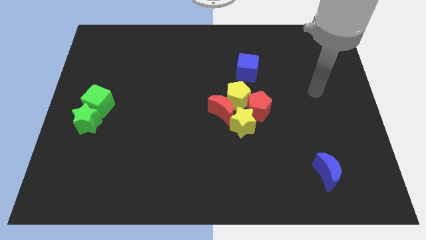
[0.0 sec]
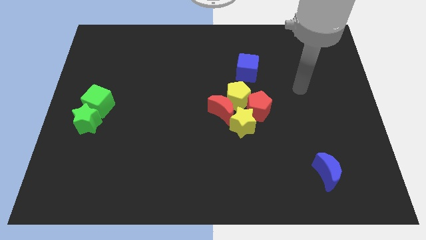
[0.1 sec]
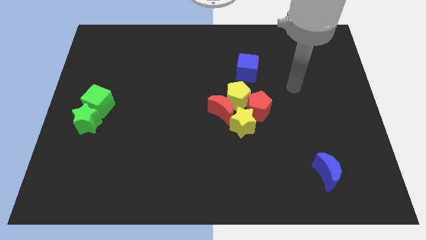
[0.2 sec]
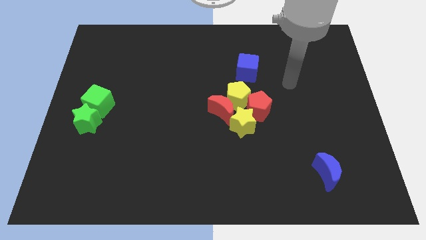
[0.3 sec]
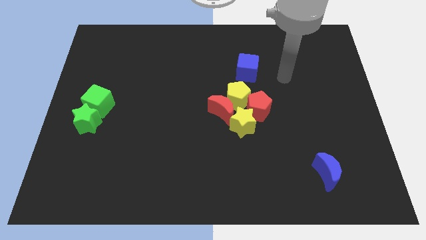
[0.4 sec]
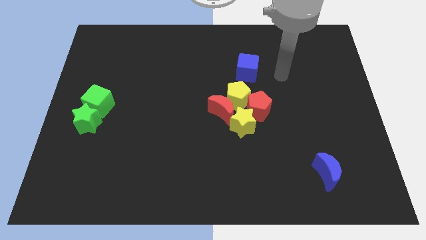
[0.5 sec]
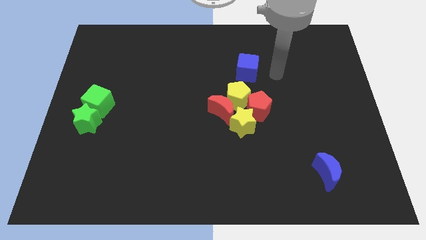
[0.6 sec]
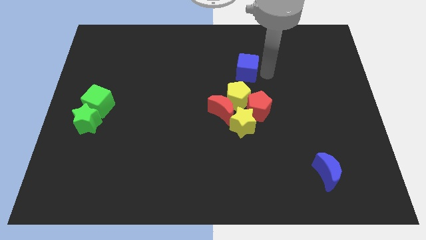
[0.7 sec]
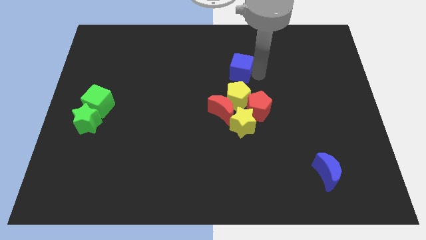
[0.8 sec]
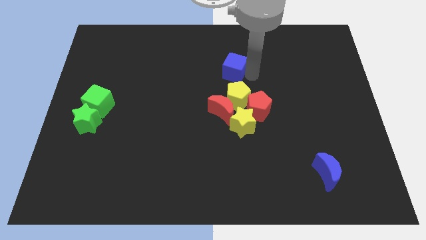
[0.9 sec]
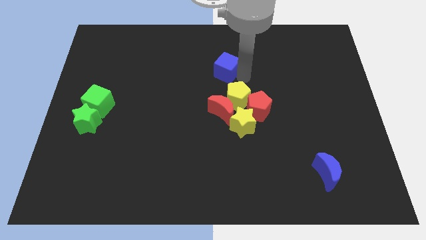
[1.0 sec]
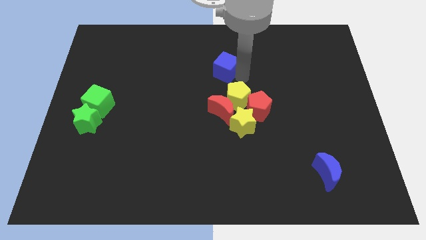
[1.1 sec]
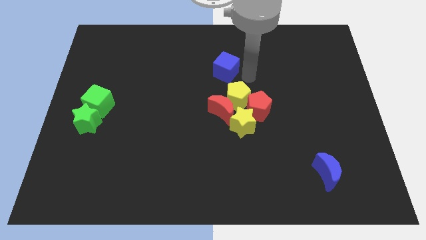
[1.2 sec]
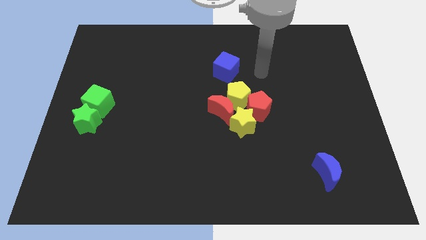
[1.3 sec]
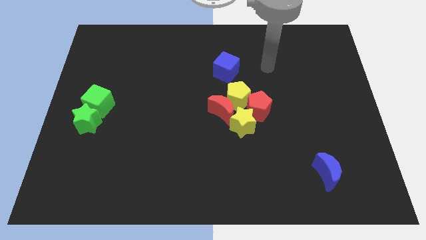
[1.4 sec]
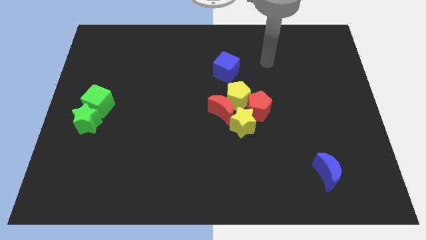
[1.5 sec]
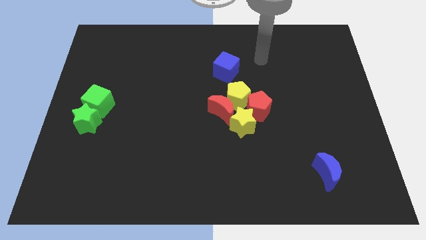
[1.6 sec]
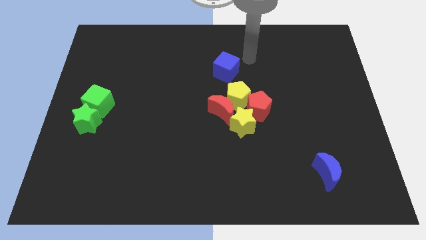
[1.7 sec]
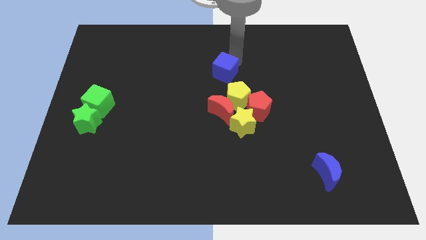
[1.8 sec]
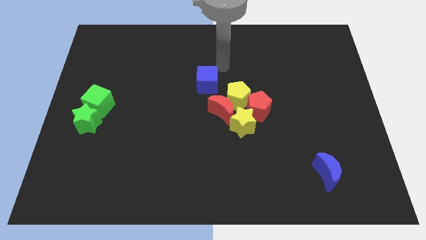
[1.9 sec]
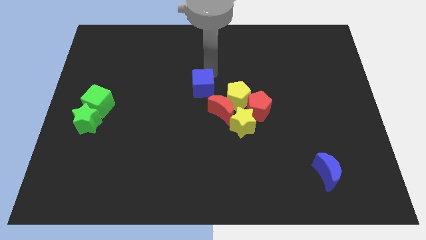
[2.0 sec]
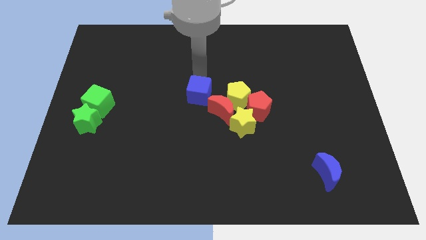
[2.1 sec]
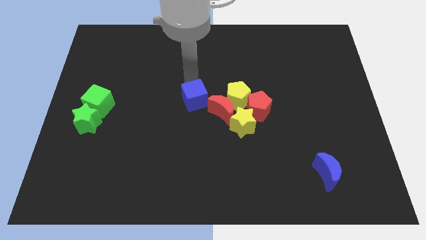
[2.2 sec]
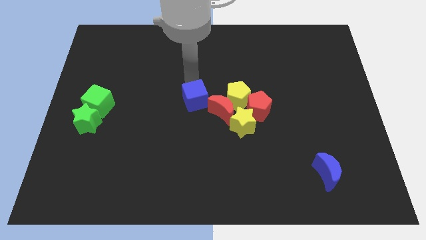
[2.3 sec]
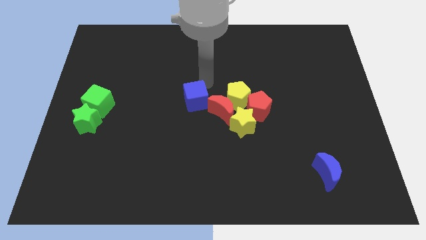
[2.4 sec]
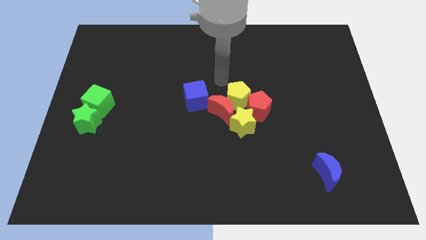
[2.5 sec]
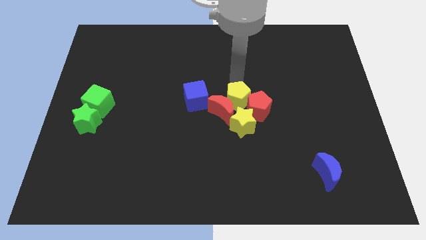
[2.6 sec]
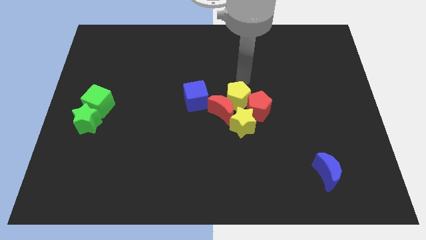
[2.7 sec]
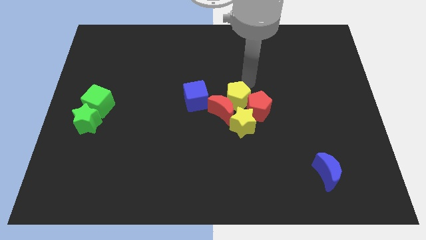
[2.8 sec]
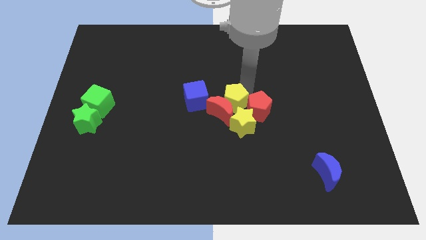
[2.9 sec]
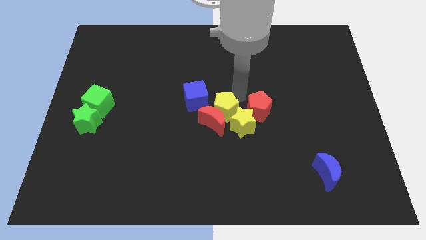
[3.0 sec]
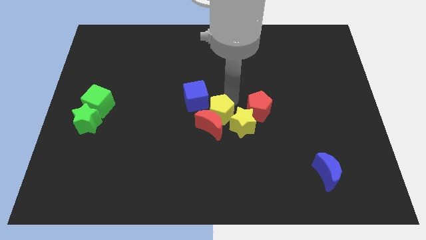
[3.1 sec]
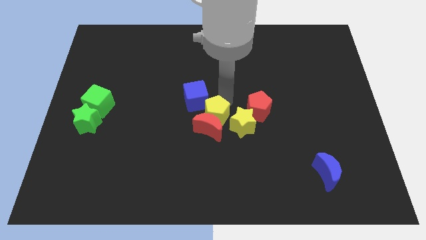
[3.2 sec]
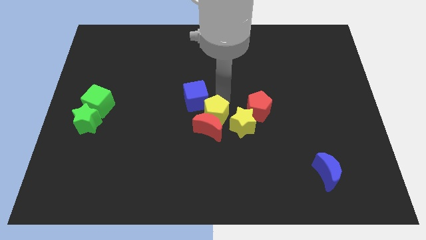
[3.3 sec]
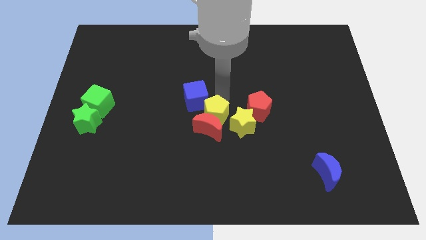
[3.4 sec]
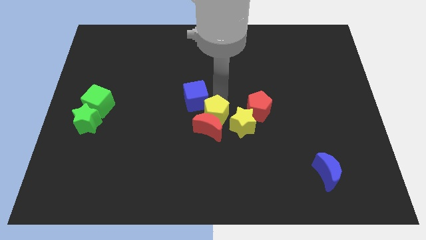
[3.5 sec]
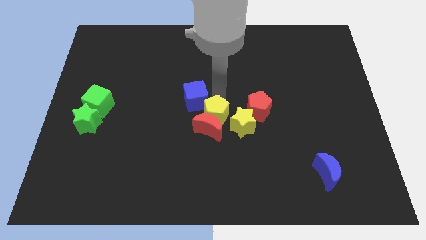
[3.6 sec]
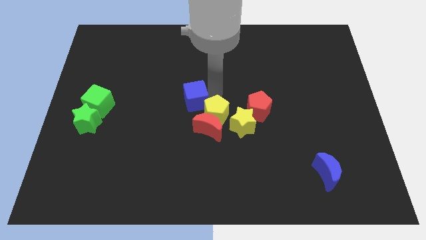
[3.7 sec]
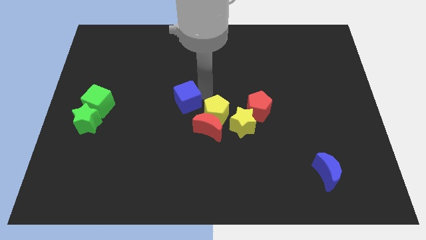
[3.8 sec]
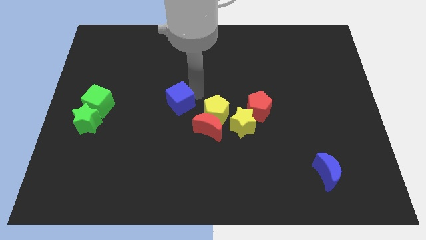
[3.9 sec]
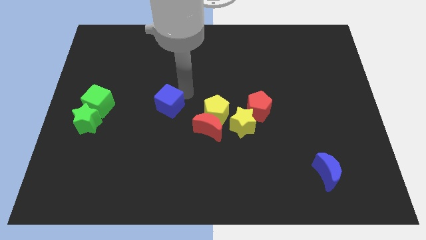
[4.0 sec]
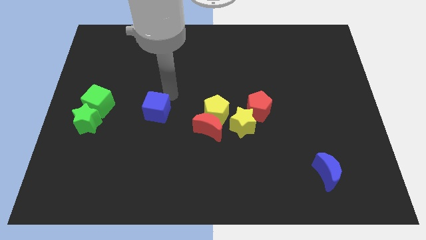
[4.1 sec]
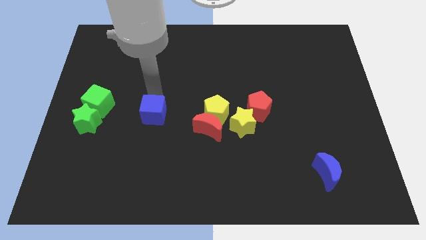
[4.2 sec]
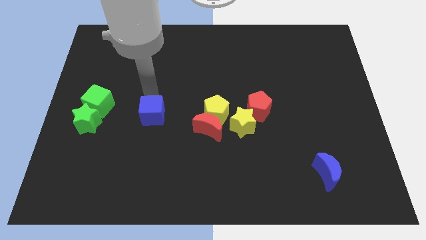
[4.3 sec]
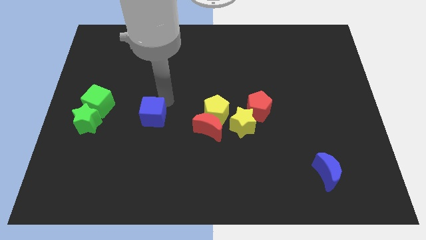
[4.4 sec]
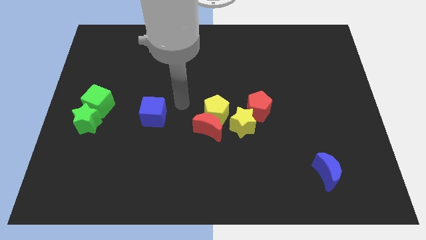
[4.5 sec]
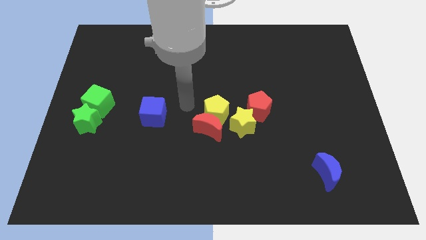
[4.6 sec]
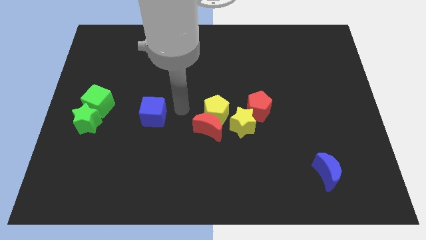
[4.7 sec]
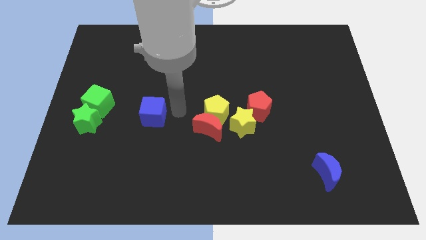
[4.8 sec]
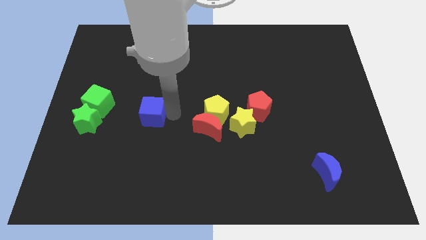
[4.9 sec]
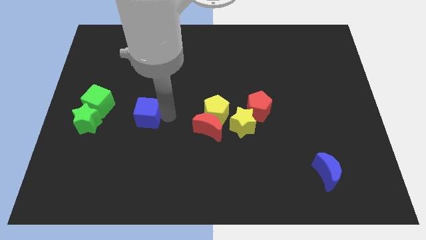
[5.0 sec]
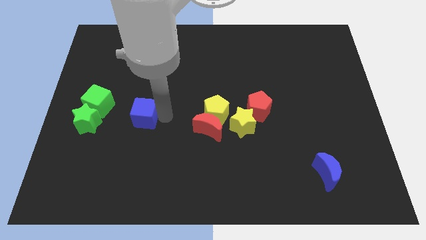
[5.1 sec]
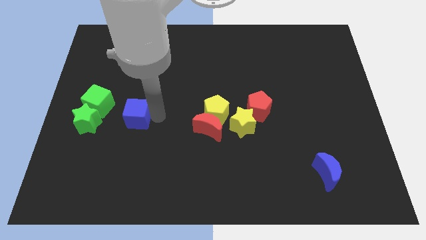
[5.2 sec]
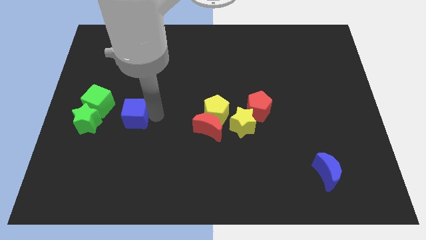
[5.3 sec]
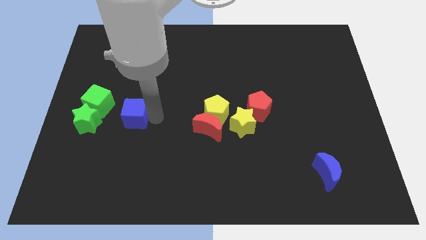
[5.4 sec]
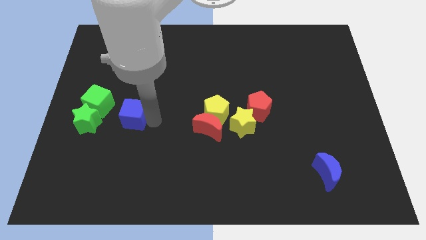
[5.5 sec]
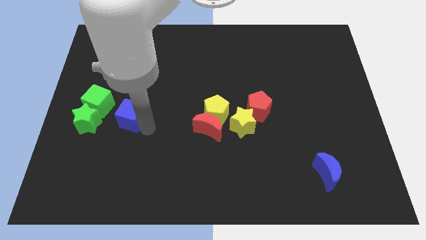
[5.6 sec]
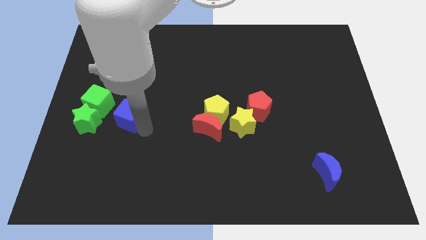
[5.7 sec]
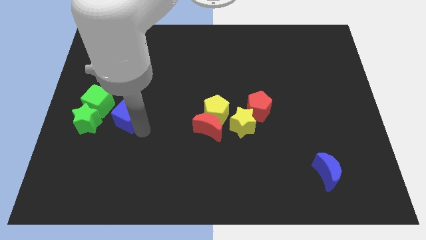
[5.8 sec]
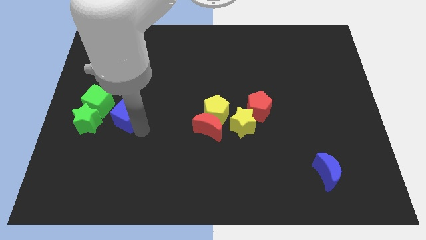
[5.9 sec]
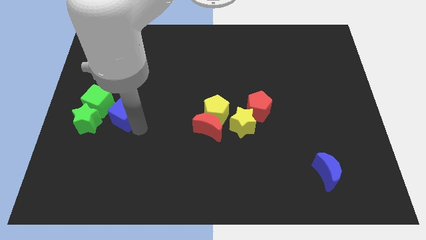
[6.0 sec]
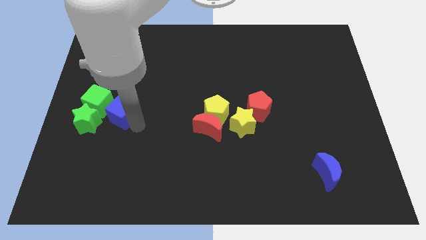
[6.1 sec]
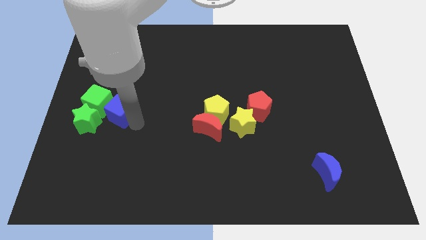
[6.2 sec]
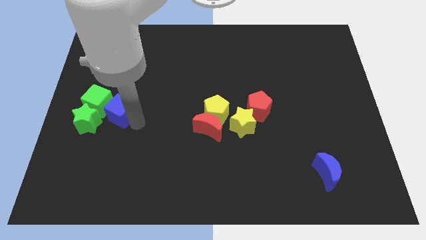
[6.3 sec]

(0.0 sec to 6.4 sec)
push the blue cube into the green cube

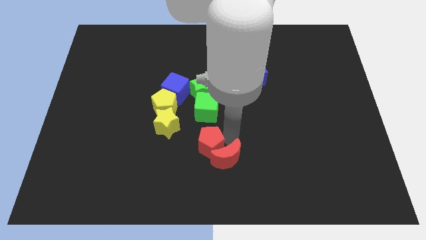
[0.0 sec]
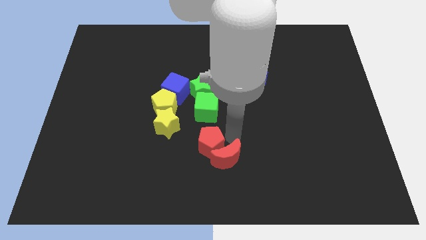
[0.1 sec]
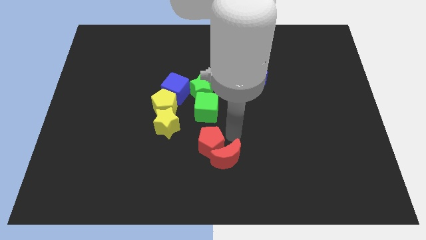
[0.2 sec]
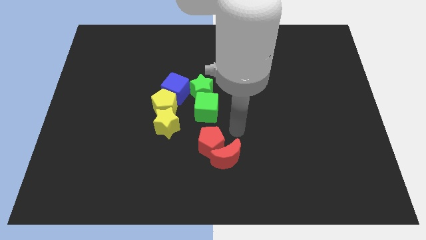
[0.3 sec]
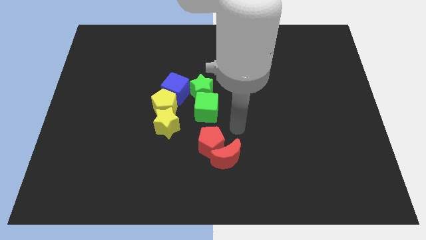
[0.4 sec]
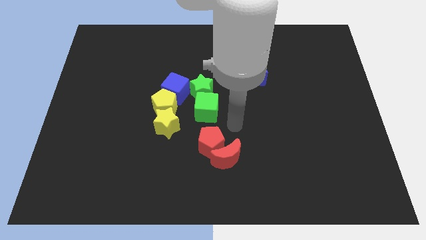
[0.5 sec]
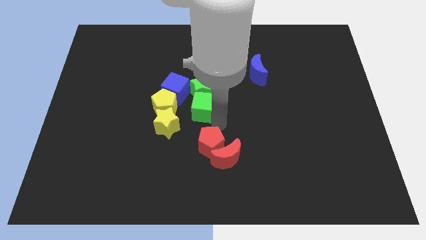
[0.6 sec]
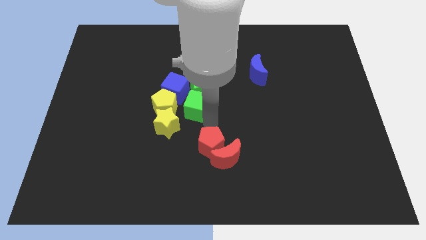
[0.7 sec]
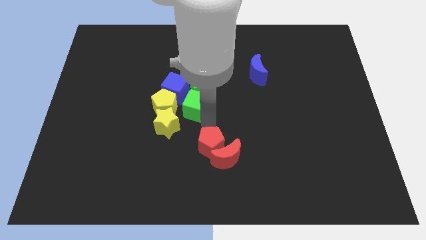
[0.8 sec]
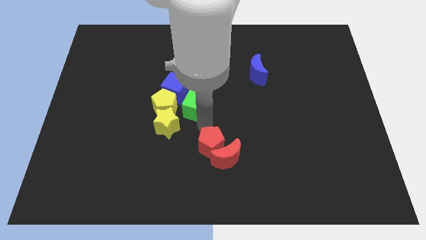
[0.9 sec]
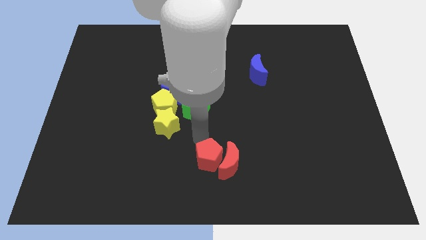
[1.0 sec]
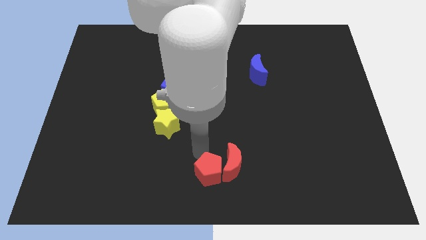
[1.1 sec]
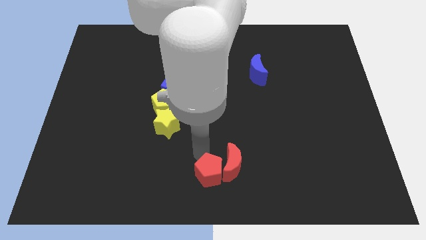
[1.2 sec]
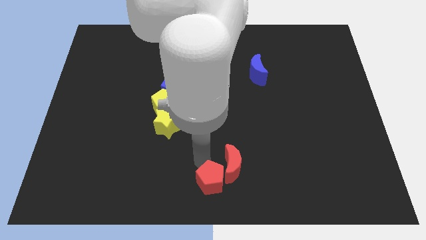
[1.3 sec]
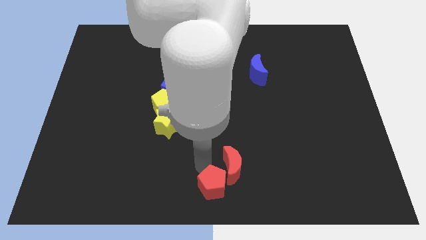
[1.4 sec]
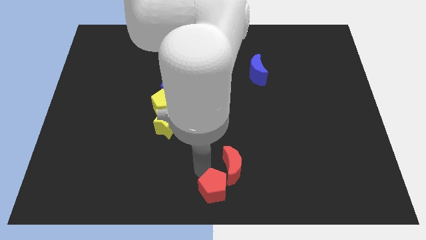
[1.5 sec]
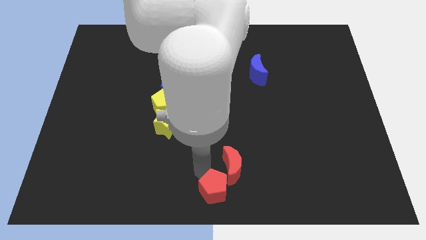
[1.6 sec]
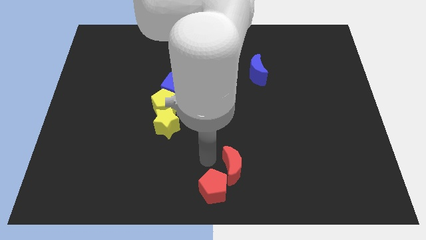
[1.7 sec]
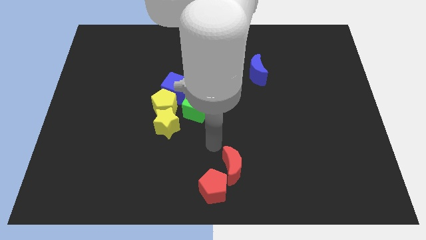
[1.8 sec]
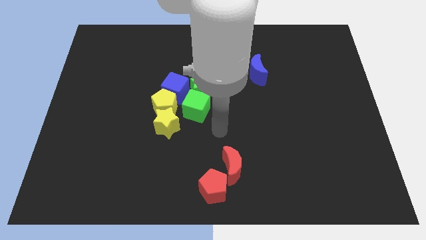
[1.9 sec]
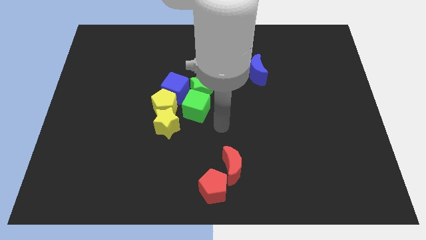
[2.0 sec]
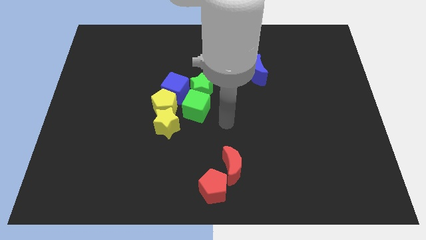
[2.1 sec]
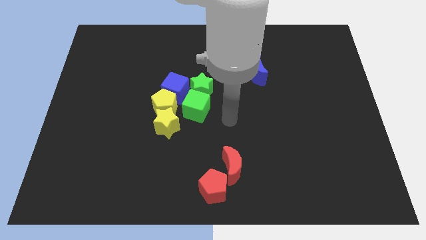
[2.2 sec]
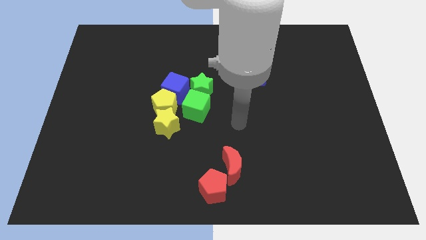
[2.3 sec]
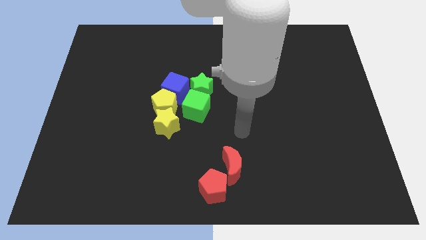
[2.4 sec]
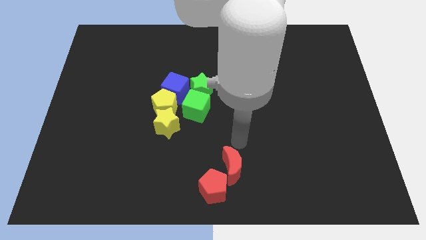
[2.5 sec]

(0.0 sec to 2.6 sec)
move the red pentagon to the bottom left side of the red moon

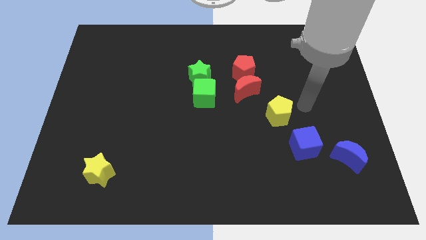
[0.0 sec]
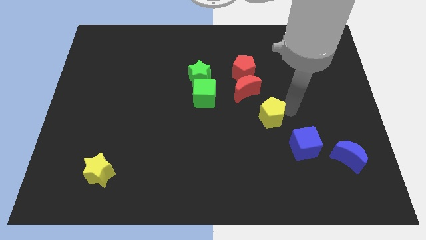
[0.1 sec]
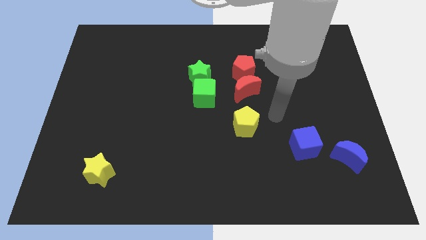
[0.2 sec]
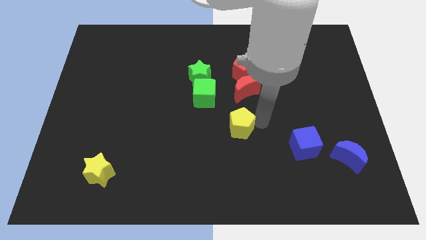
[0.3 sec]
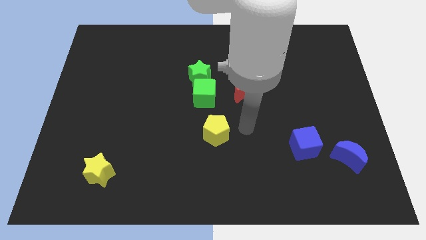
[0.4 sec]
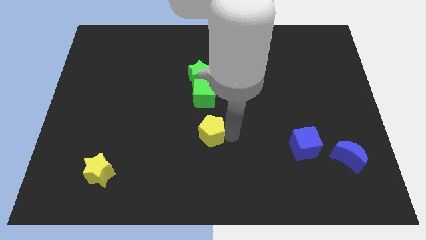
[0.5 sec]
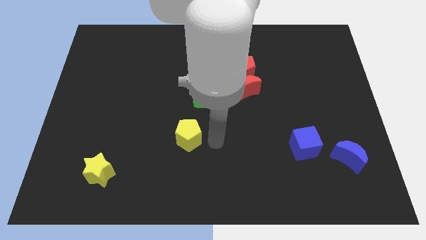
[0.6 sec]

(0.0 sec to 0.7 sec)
place the yellow pentagon under the green cube
